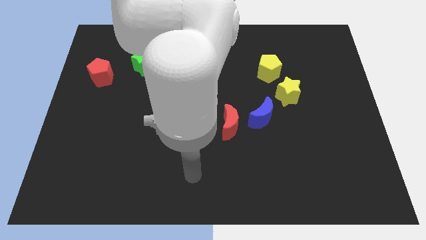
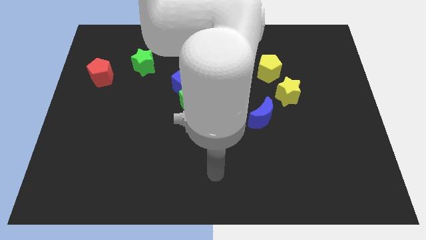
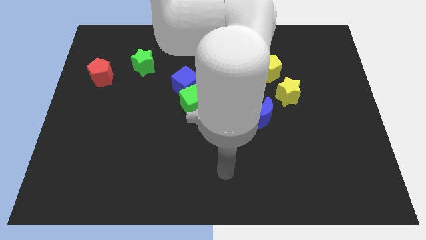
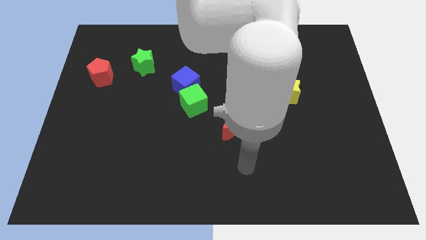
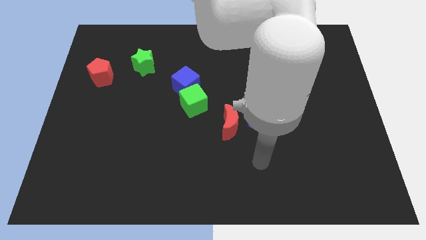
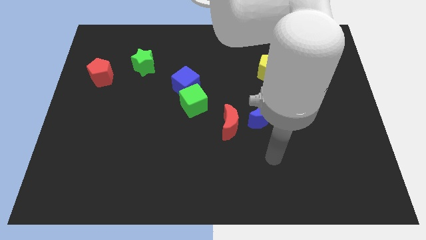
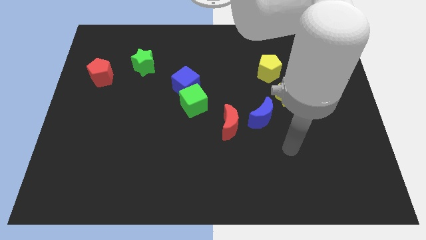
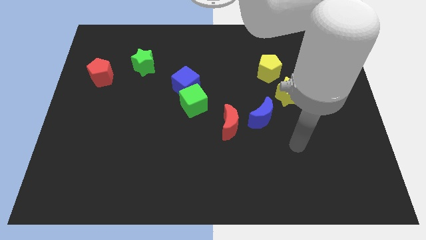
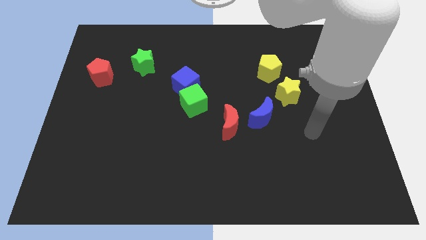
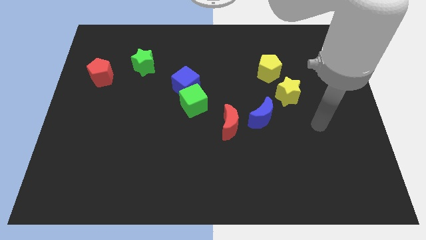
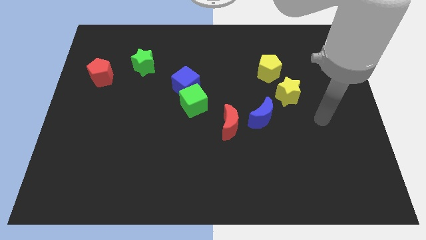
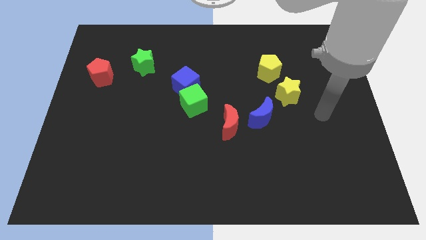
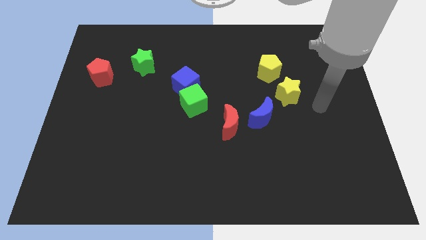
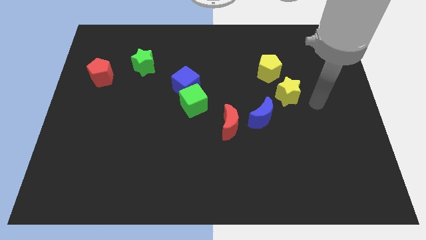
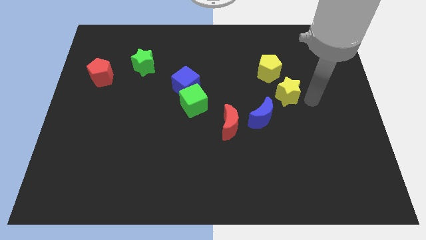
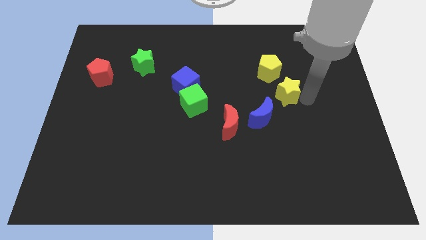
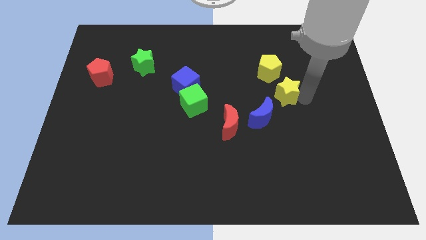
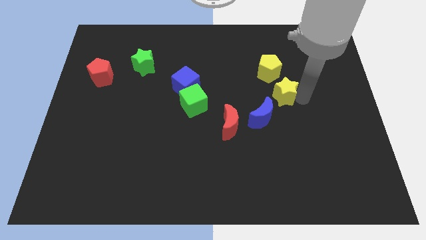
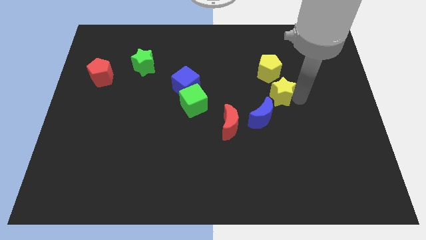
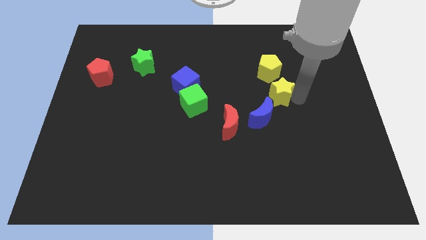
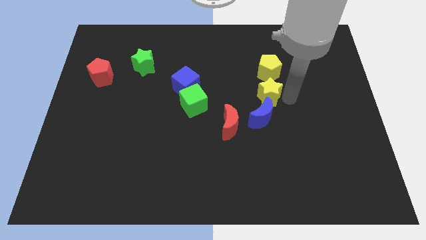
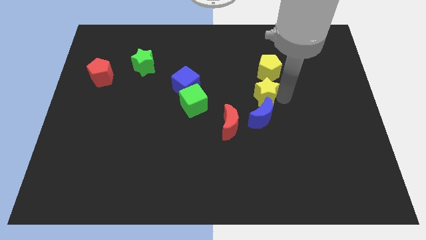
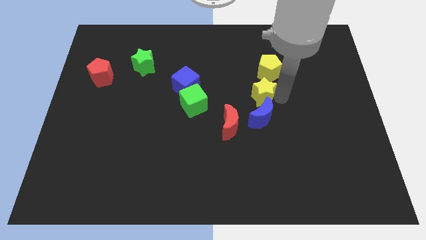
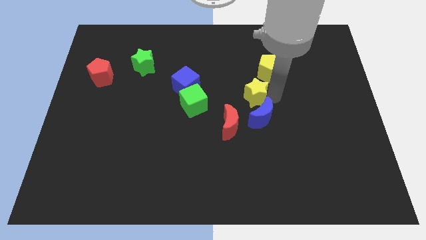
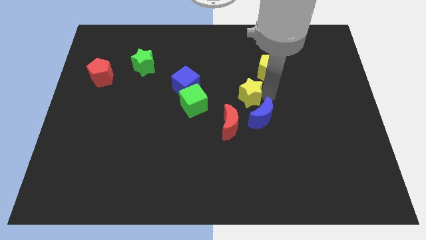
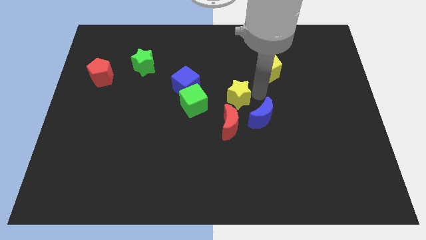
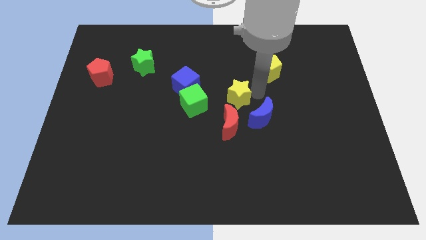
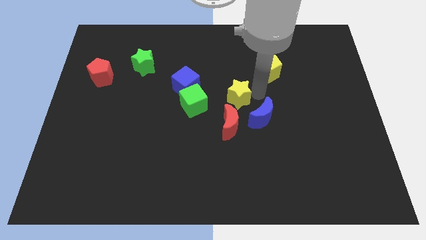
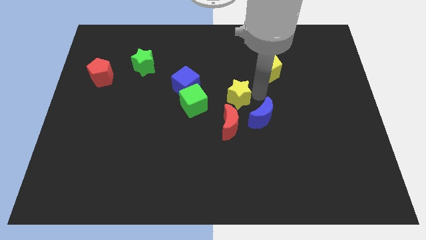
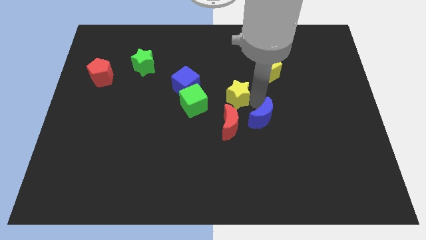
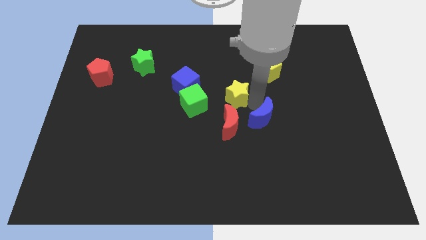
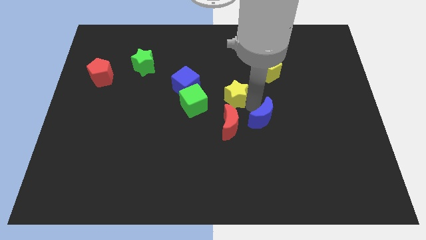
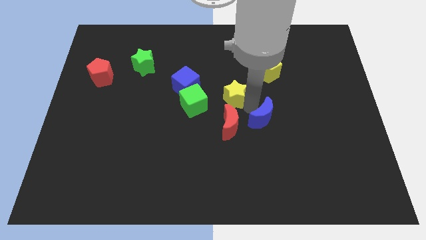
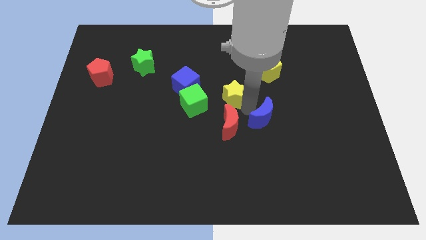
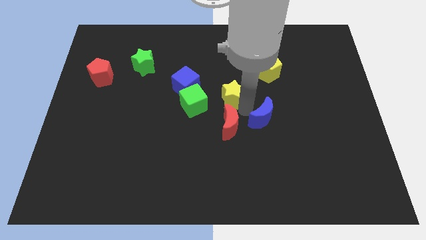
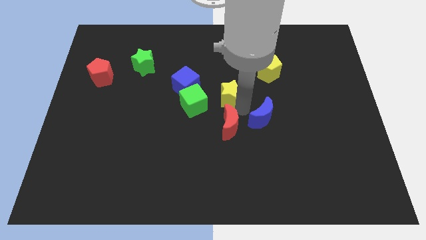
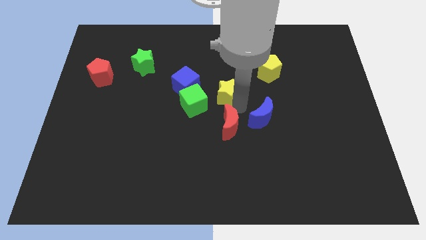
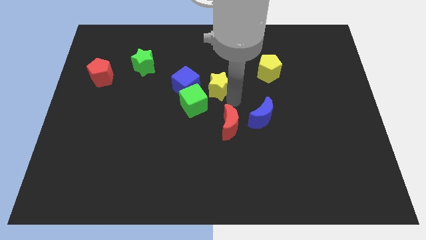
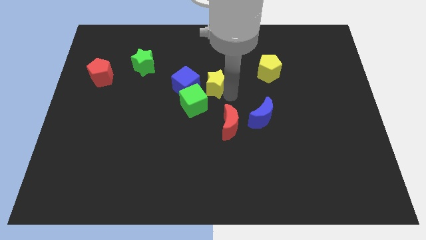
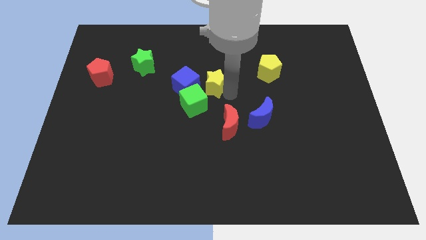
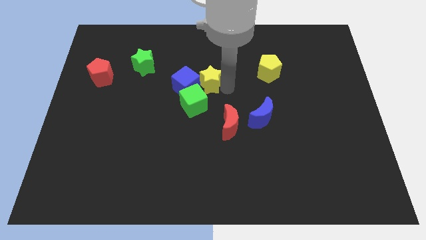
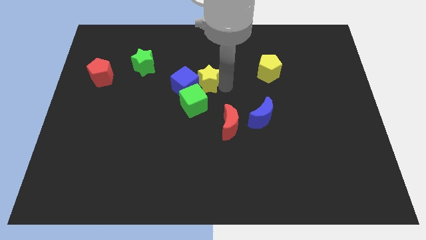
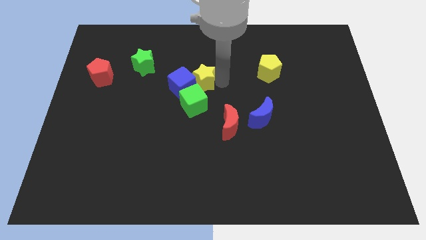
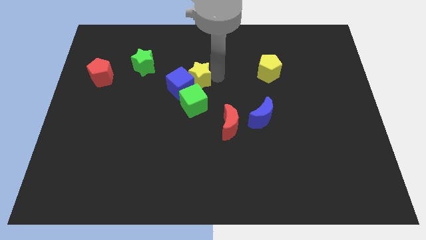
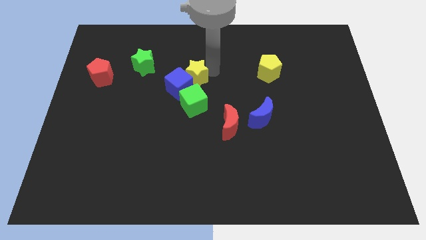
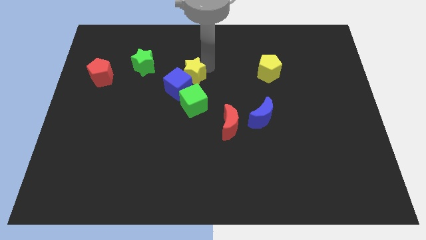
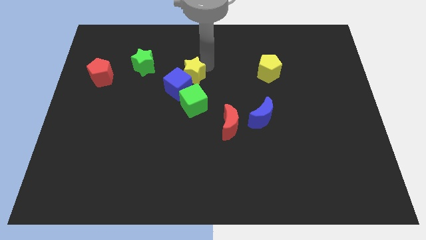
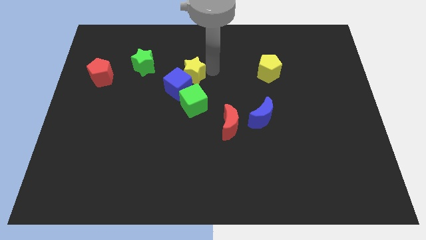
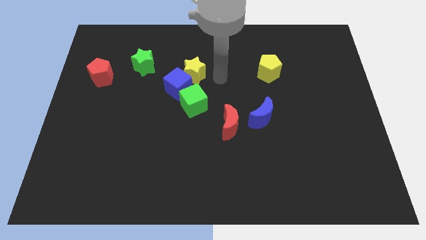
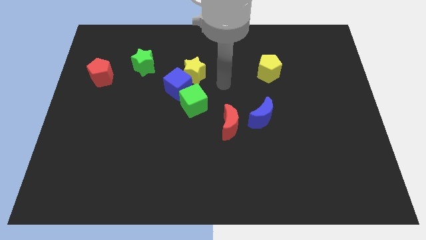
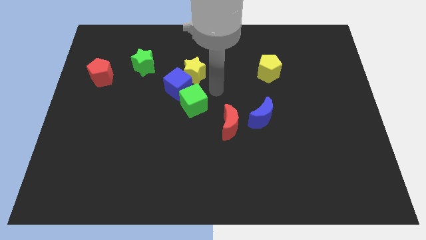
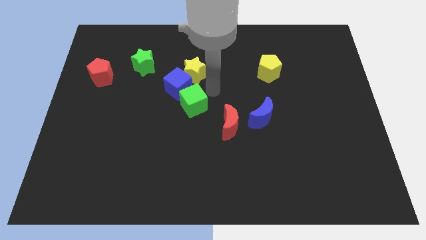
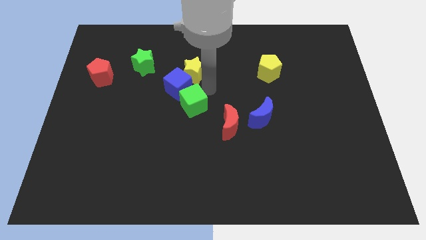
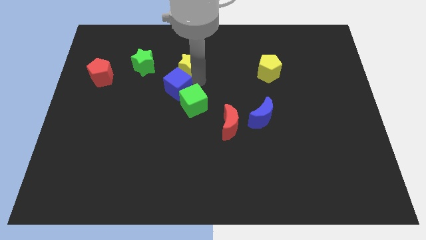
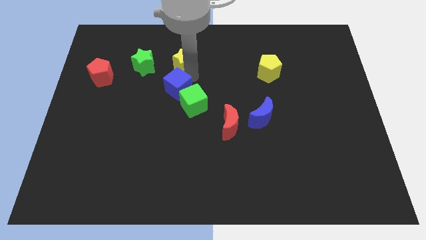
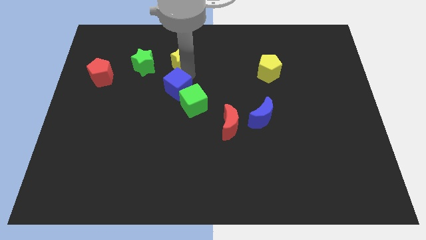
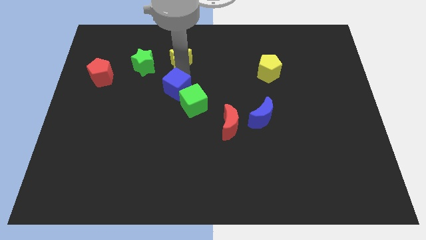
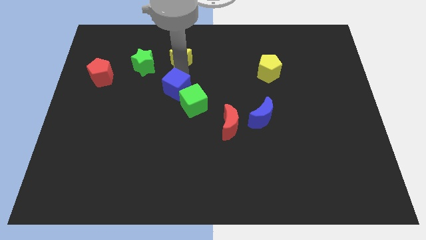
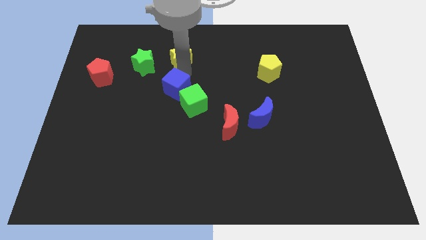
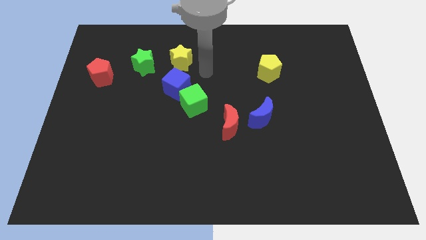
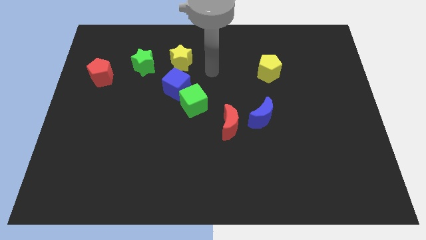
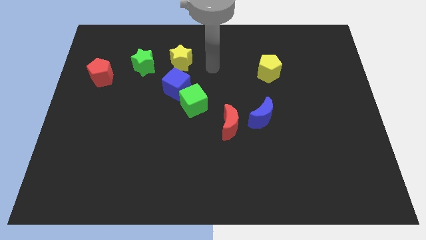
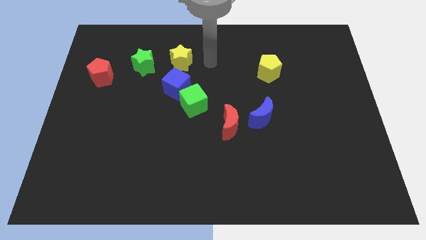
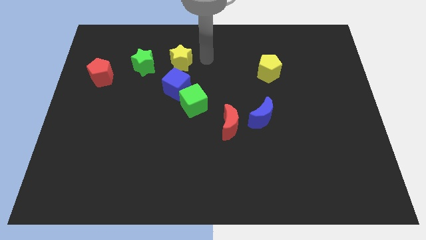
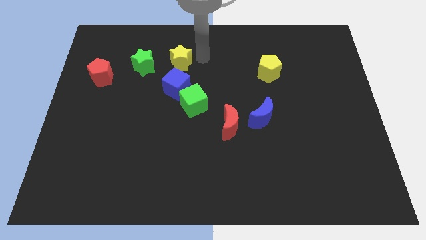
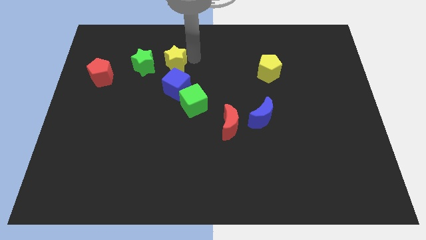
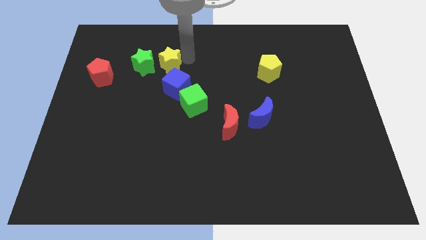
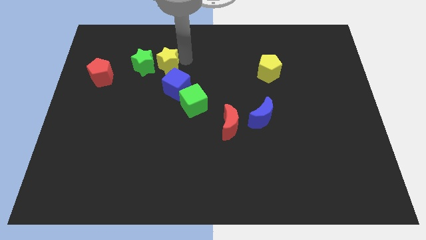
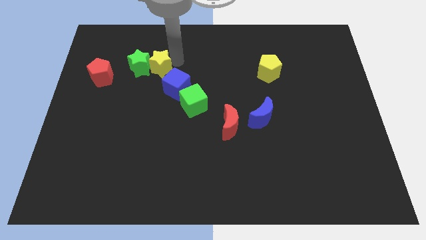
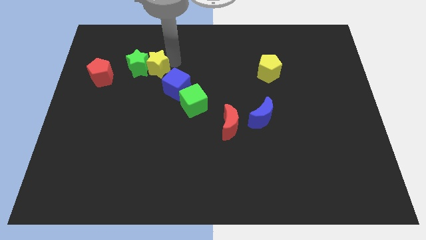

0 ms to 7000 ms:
put the yellow star close to the green star

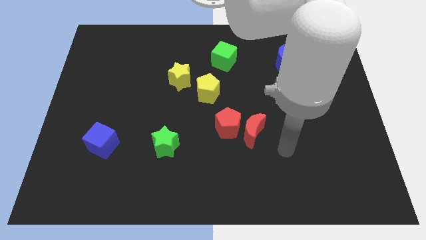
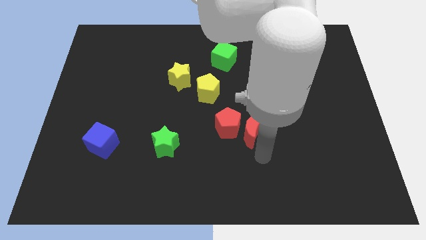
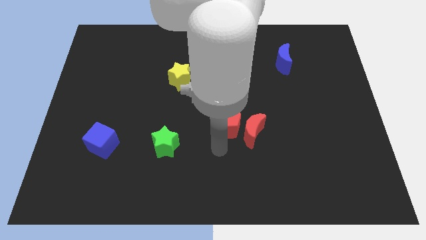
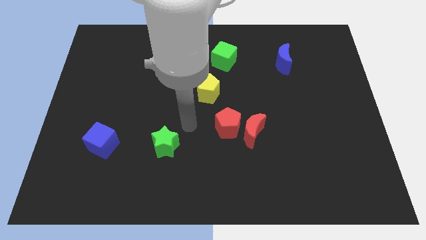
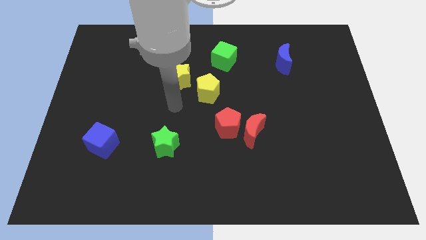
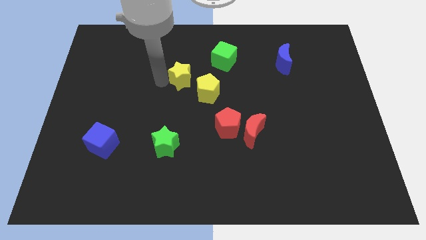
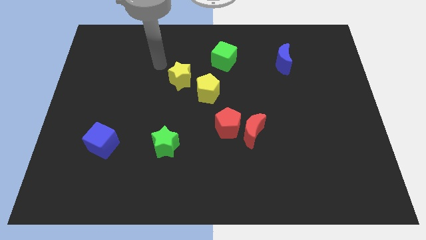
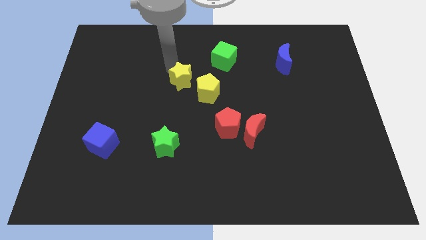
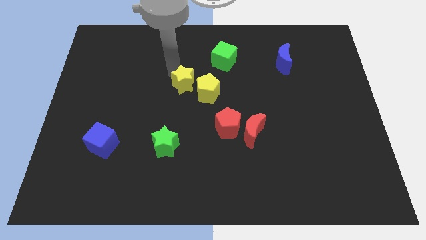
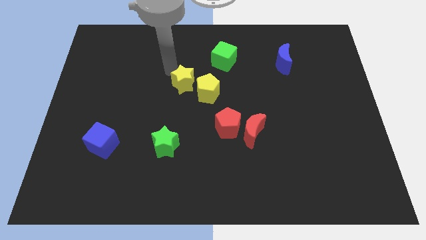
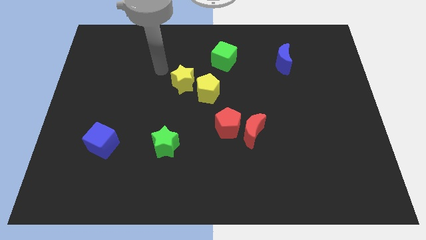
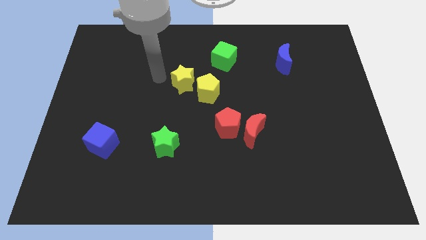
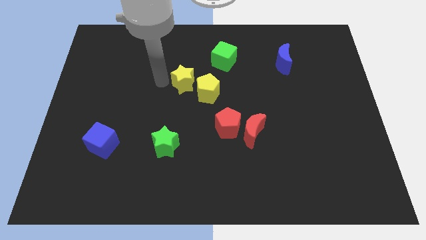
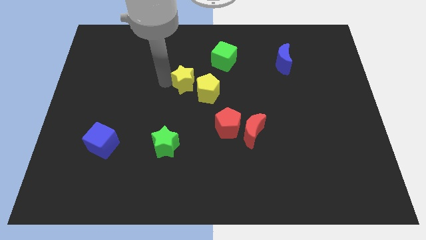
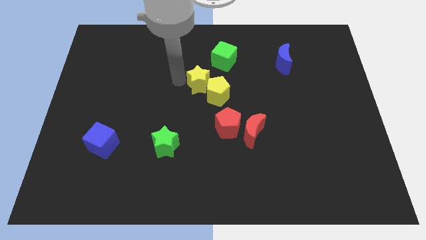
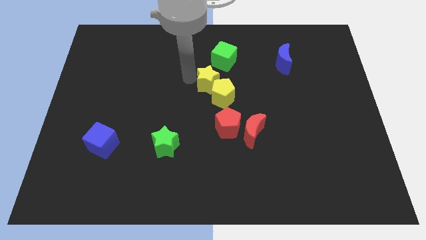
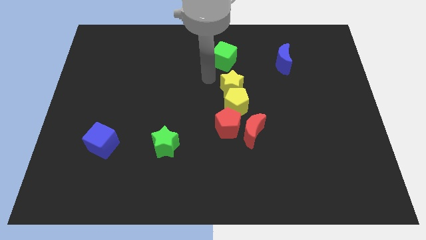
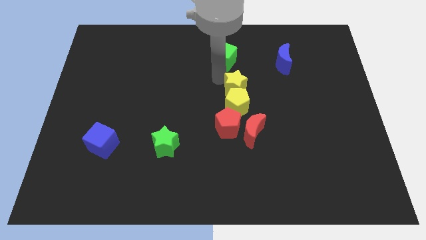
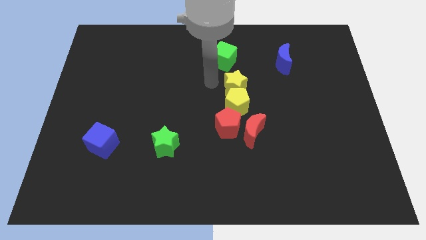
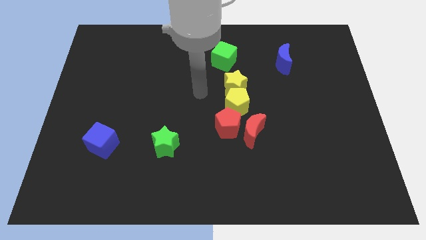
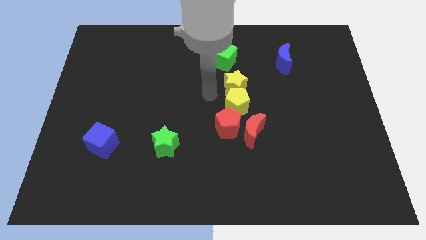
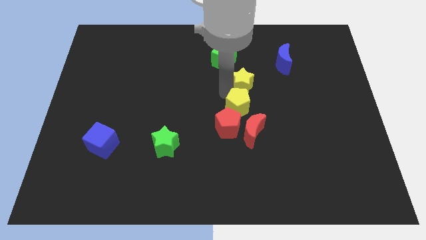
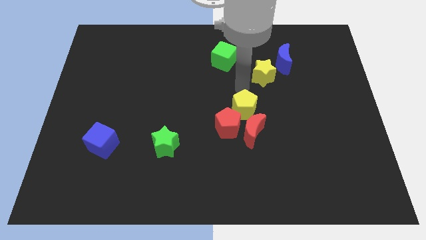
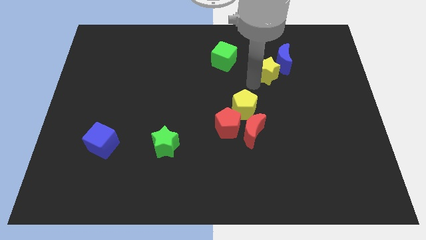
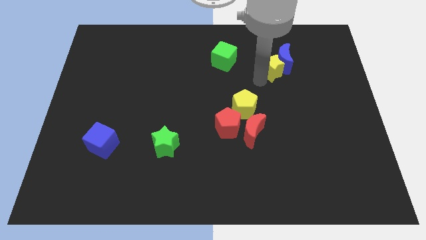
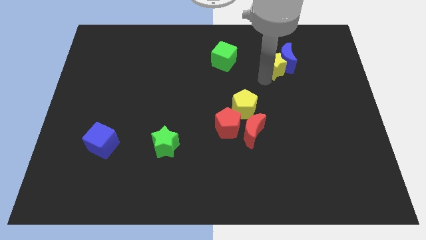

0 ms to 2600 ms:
slide the yellow star towards the blue moon
